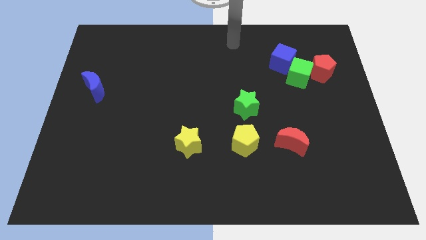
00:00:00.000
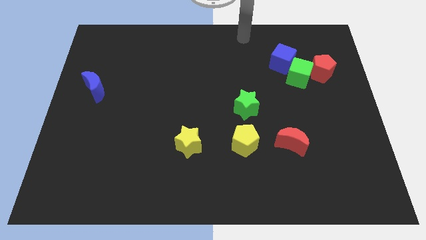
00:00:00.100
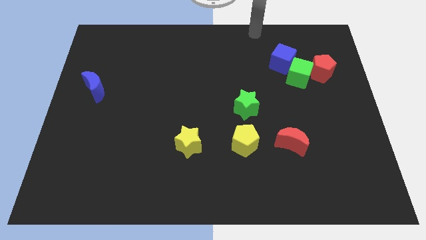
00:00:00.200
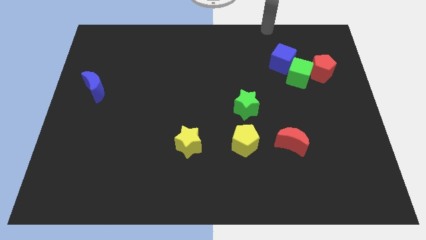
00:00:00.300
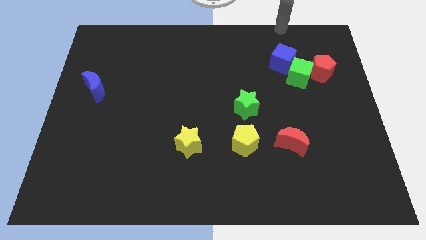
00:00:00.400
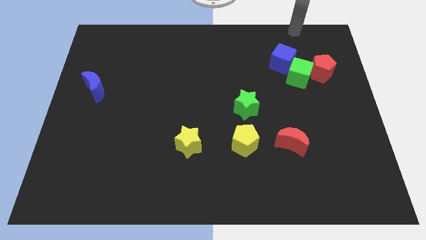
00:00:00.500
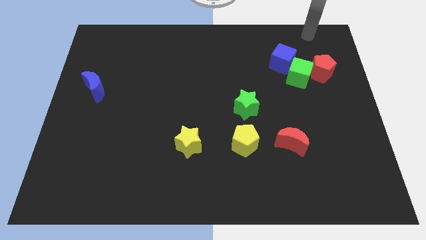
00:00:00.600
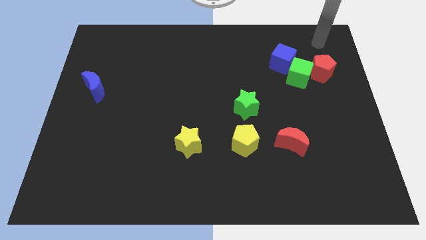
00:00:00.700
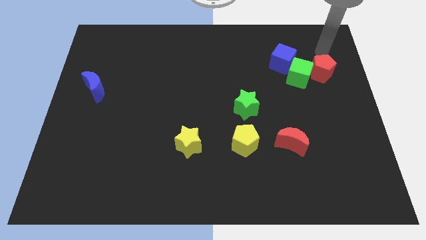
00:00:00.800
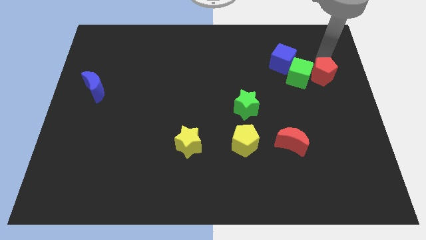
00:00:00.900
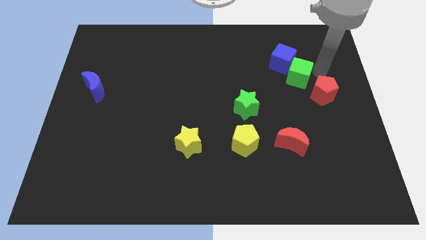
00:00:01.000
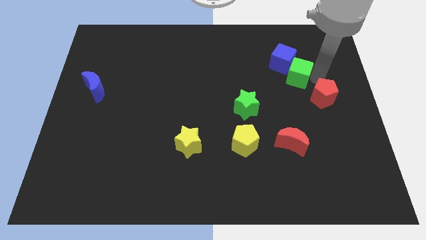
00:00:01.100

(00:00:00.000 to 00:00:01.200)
slide the red pentagon right below the green cube

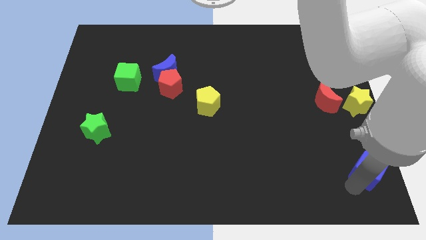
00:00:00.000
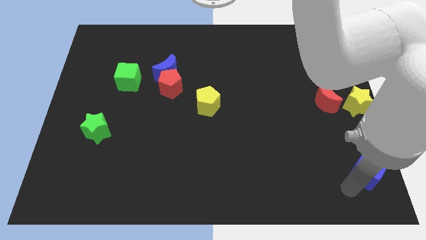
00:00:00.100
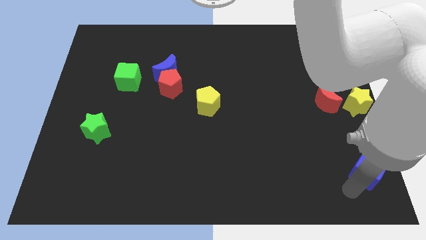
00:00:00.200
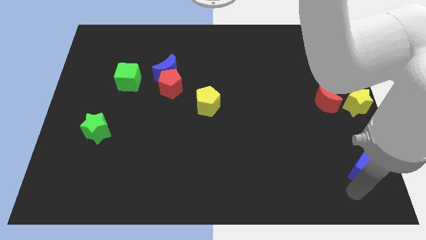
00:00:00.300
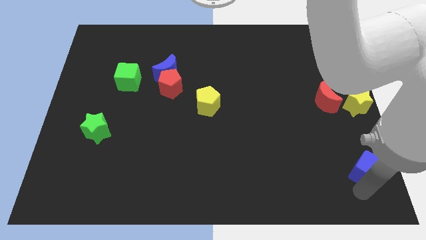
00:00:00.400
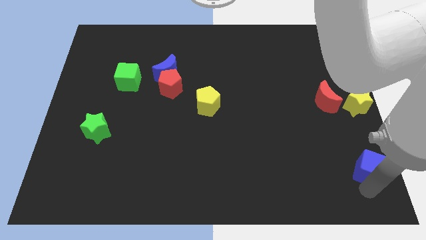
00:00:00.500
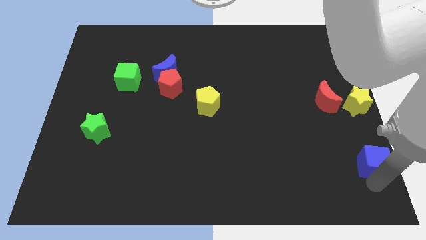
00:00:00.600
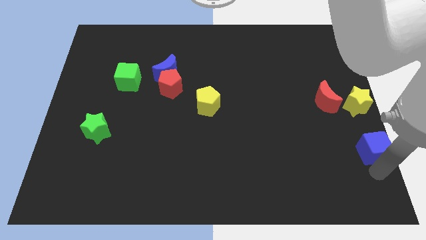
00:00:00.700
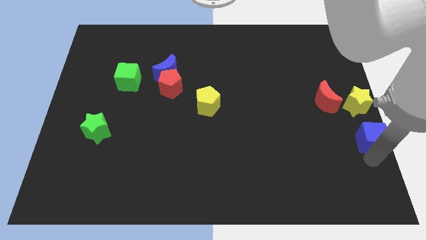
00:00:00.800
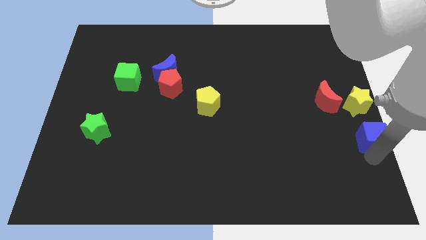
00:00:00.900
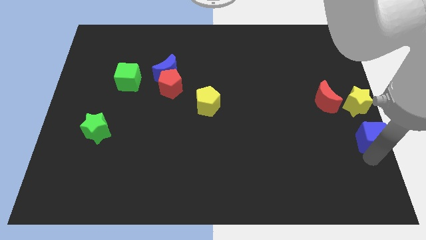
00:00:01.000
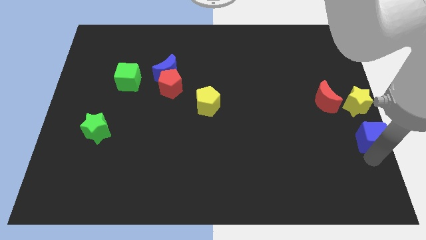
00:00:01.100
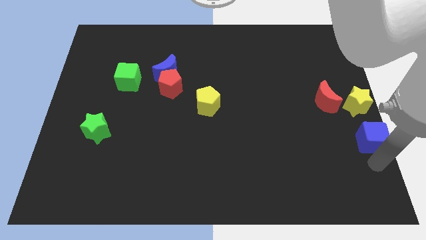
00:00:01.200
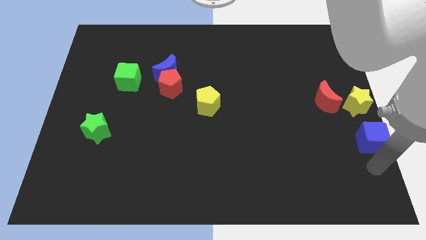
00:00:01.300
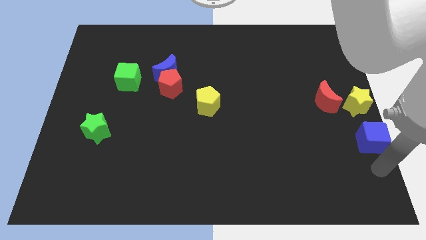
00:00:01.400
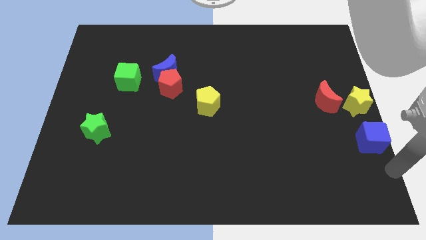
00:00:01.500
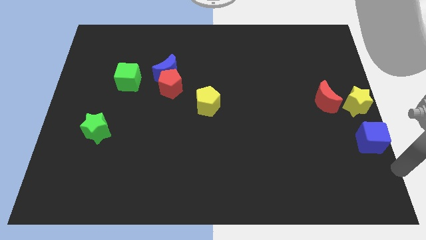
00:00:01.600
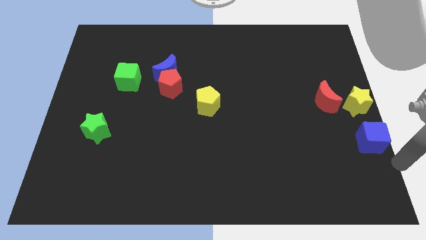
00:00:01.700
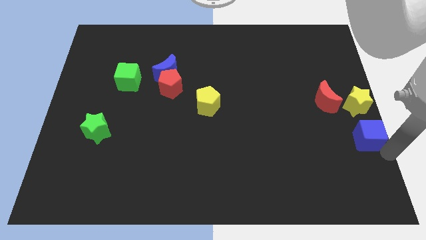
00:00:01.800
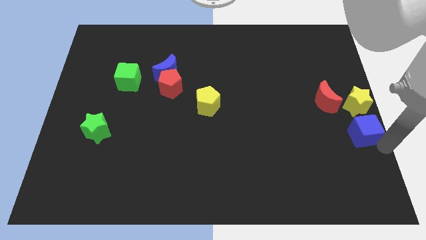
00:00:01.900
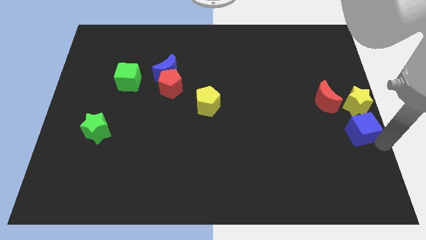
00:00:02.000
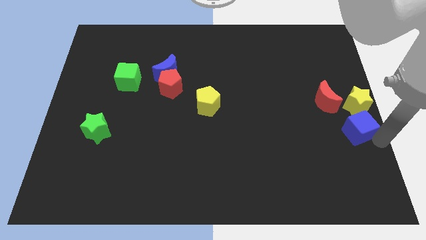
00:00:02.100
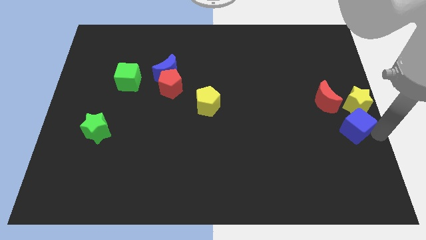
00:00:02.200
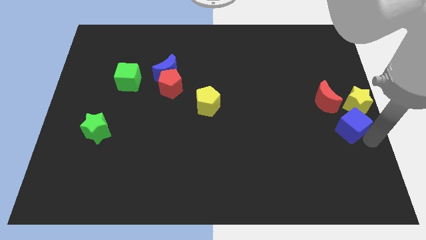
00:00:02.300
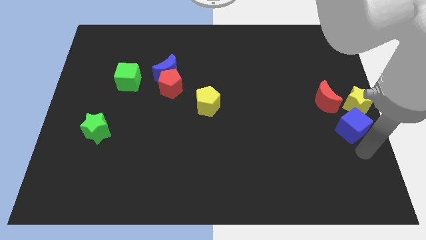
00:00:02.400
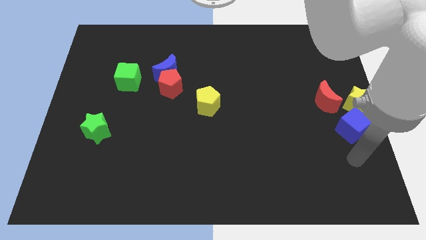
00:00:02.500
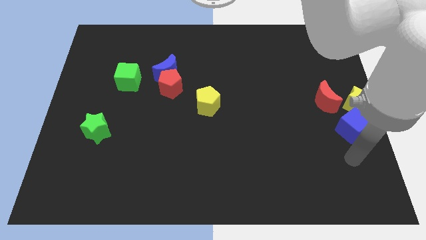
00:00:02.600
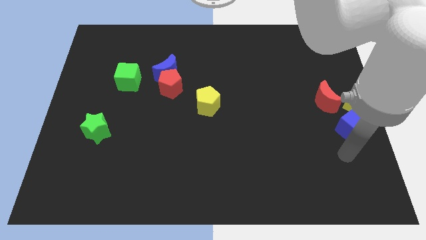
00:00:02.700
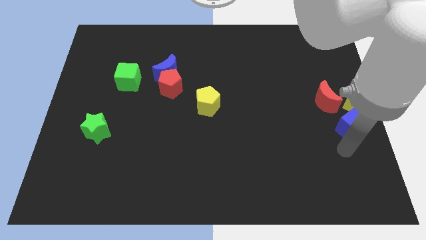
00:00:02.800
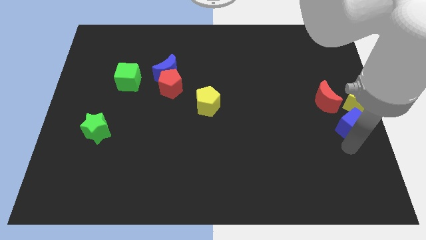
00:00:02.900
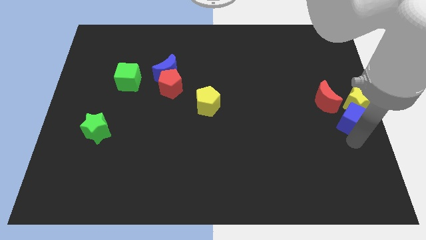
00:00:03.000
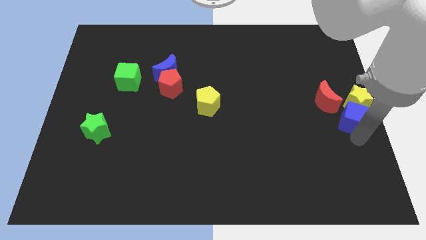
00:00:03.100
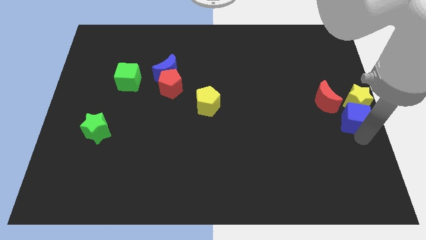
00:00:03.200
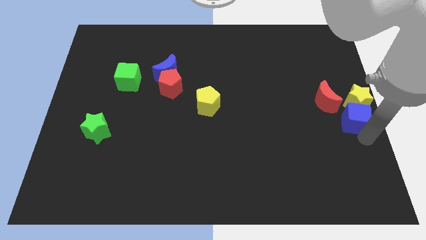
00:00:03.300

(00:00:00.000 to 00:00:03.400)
push the blue cube under the yellow star

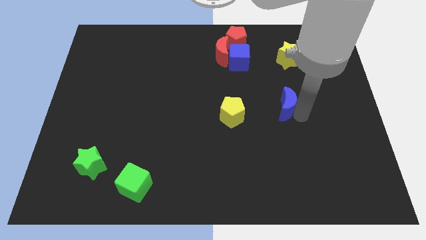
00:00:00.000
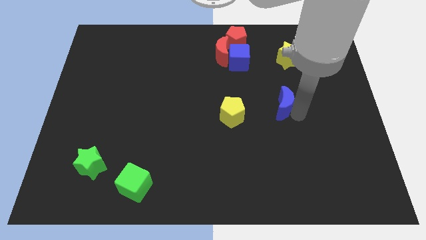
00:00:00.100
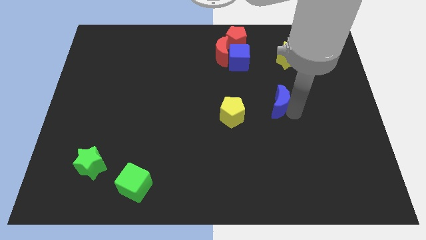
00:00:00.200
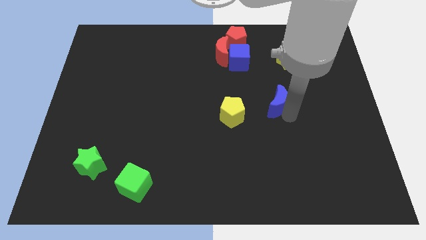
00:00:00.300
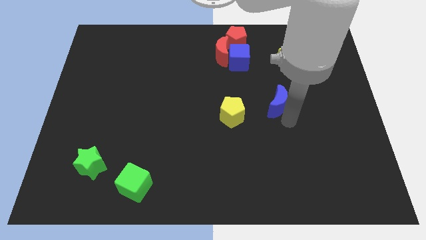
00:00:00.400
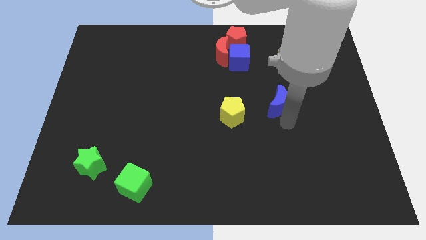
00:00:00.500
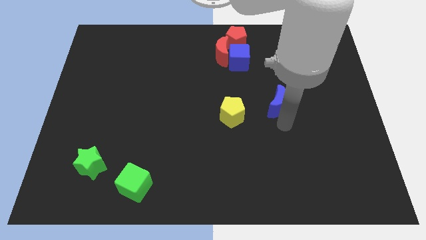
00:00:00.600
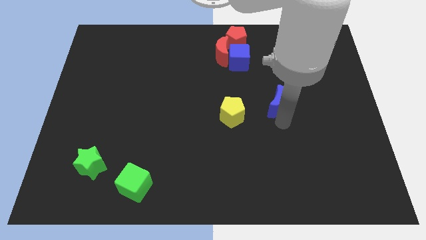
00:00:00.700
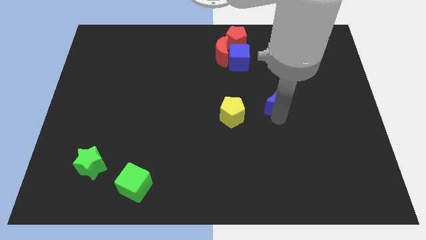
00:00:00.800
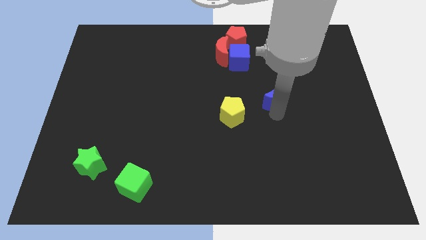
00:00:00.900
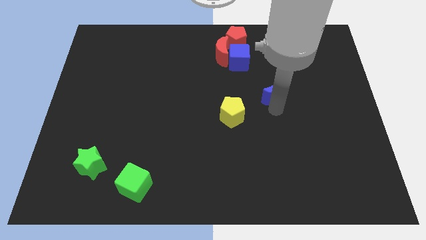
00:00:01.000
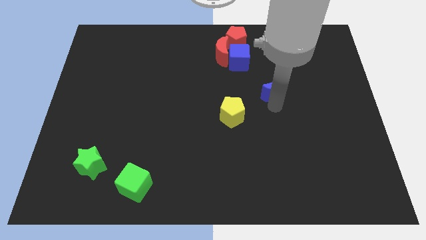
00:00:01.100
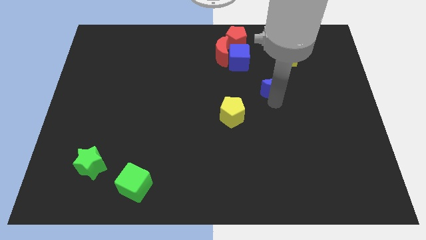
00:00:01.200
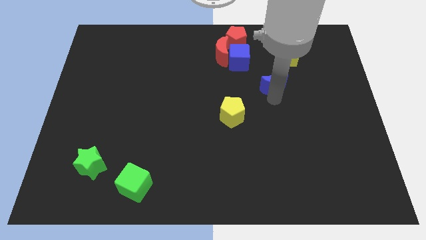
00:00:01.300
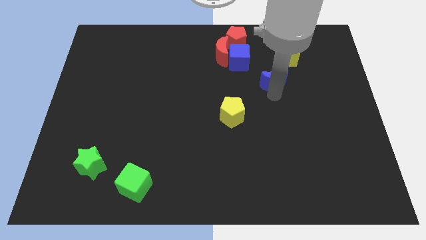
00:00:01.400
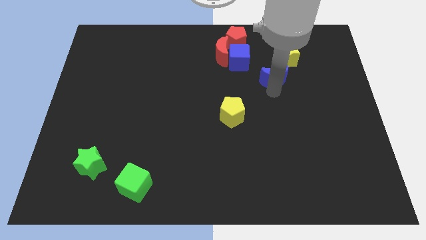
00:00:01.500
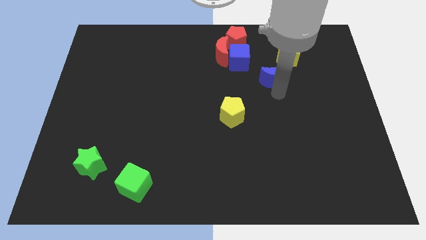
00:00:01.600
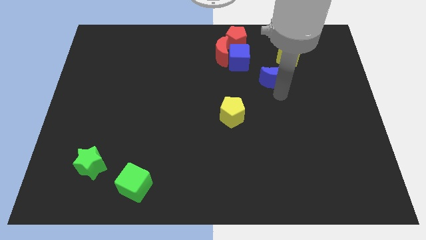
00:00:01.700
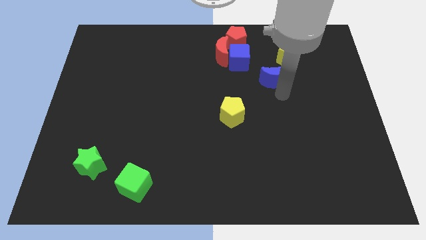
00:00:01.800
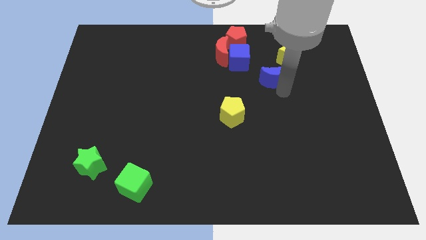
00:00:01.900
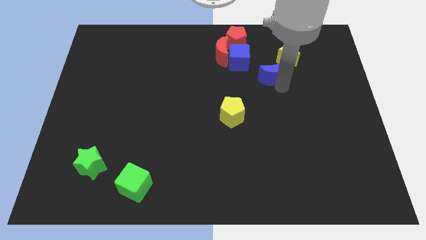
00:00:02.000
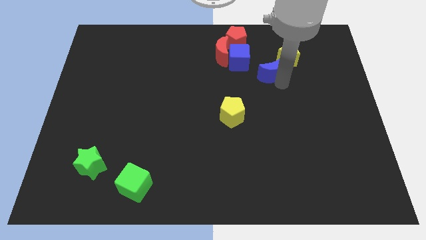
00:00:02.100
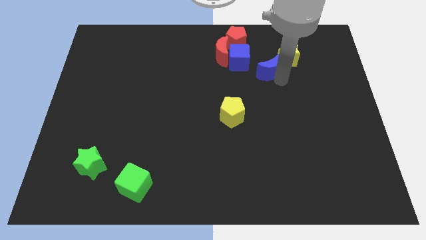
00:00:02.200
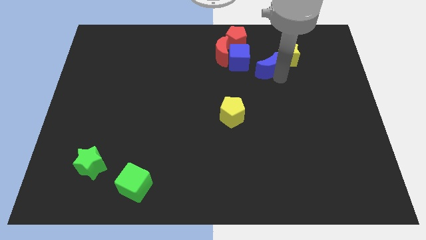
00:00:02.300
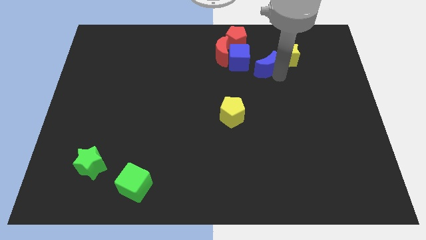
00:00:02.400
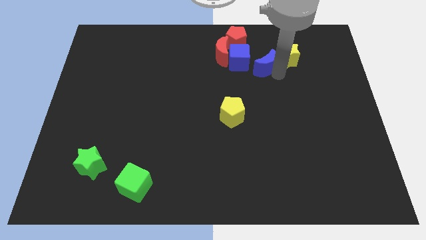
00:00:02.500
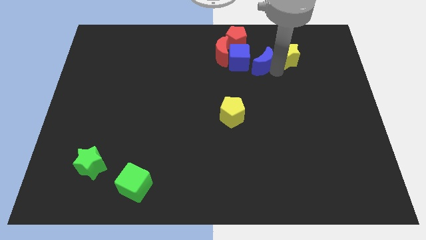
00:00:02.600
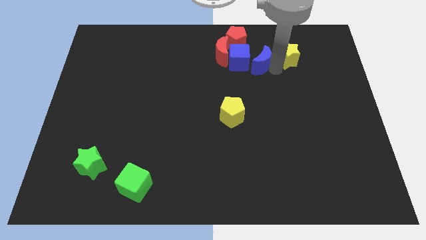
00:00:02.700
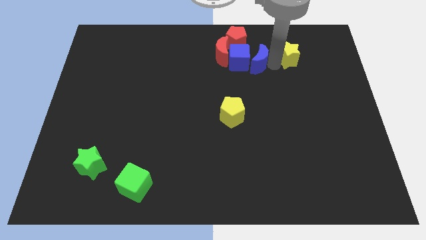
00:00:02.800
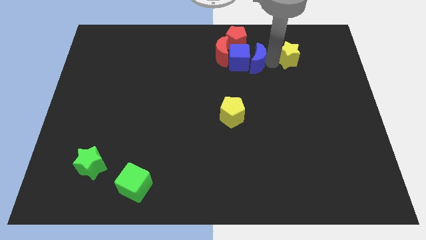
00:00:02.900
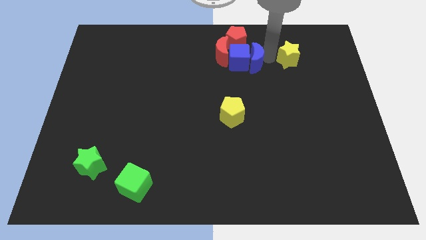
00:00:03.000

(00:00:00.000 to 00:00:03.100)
put blue crescent in between yellow star and blue cube

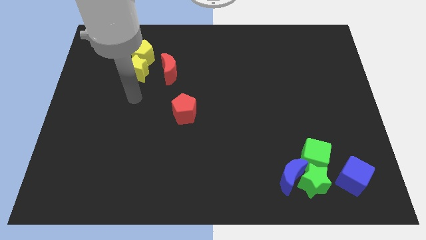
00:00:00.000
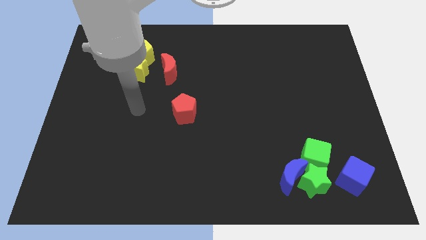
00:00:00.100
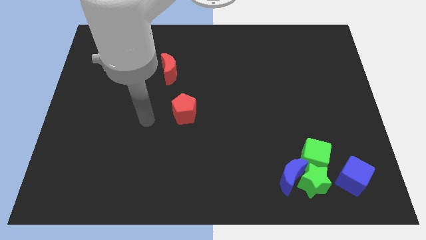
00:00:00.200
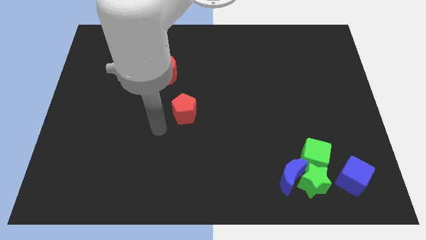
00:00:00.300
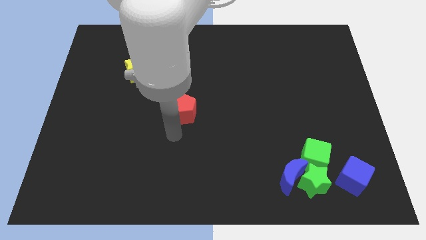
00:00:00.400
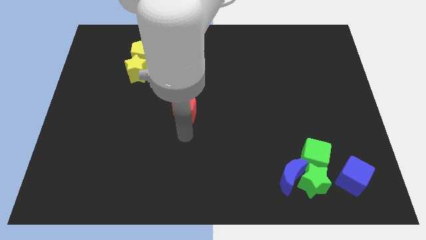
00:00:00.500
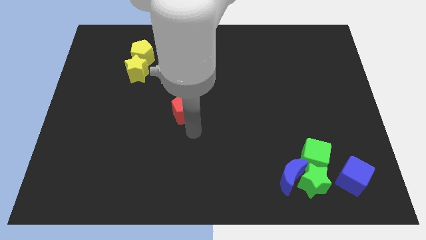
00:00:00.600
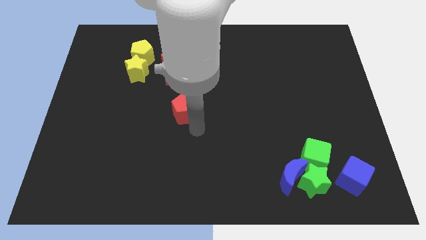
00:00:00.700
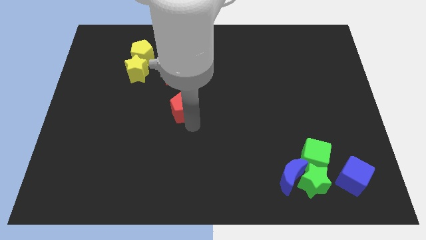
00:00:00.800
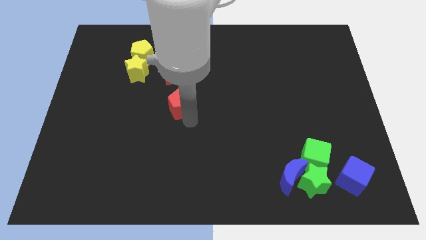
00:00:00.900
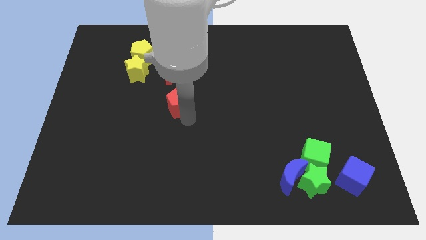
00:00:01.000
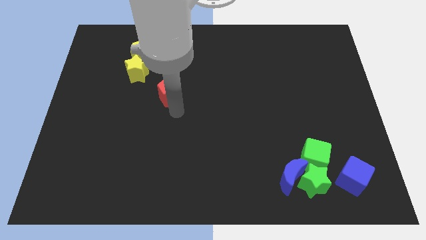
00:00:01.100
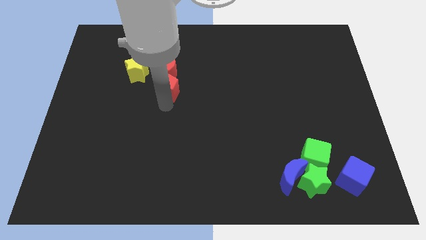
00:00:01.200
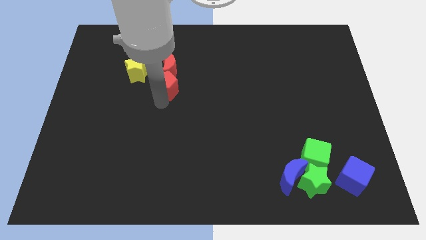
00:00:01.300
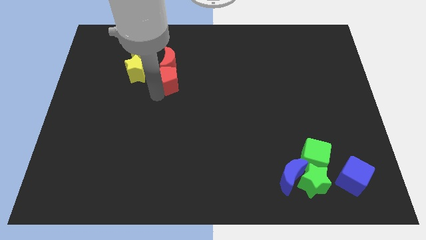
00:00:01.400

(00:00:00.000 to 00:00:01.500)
push the red pentagon into the red crescent
